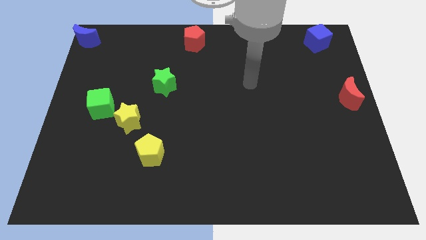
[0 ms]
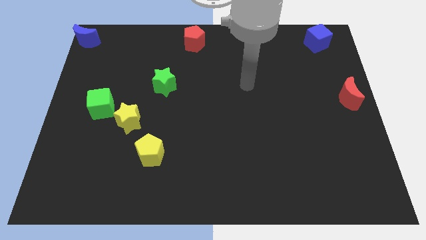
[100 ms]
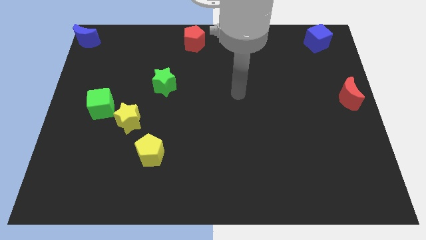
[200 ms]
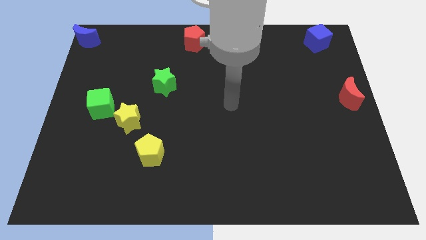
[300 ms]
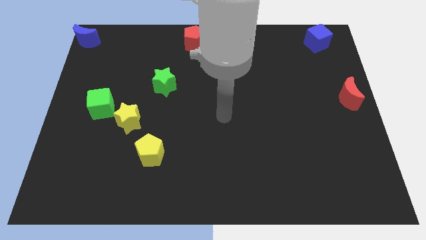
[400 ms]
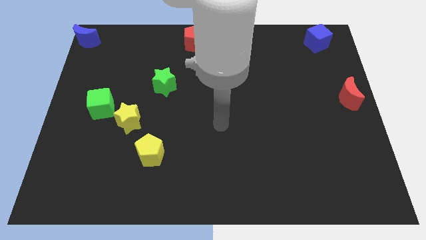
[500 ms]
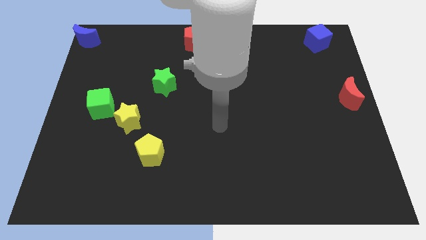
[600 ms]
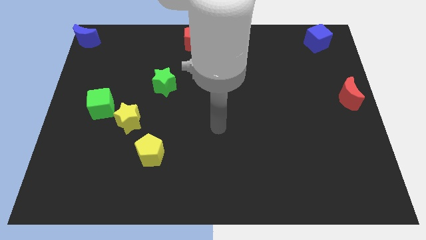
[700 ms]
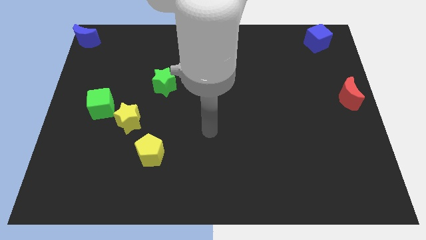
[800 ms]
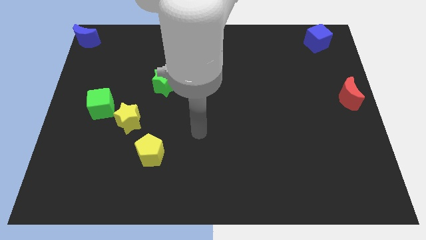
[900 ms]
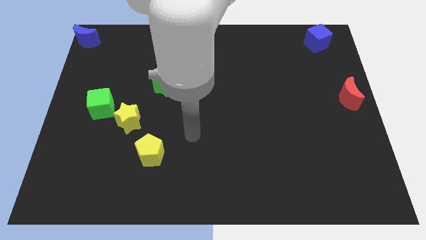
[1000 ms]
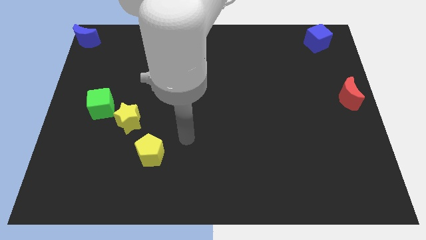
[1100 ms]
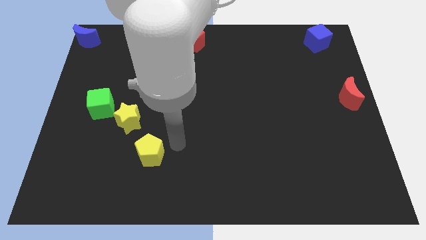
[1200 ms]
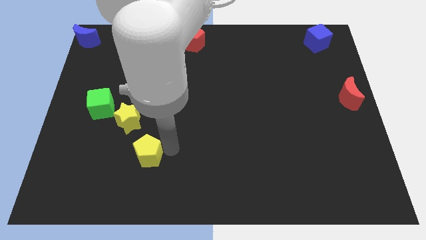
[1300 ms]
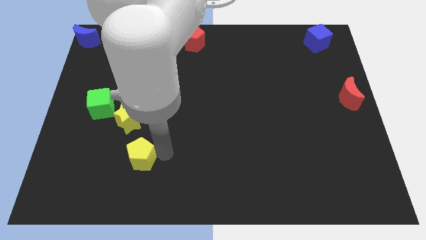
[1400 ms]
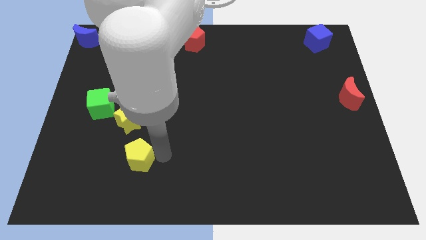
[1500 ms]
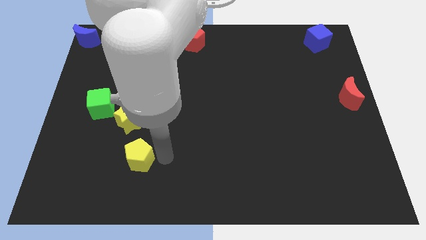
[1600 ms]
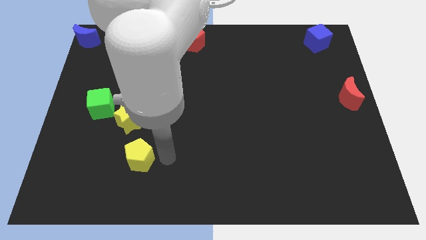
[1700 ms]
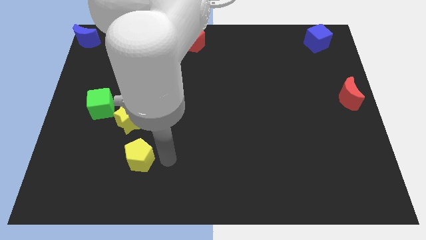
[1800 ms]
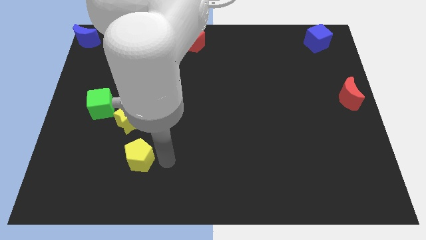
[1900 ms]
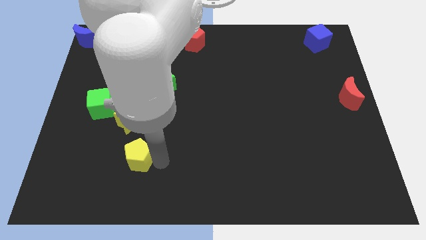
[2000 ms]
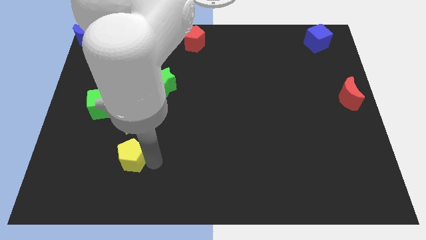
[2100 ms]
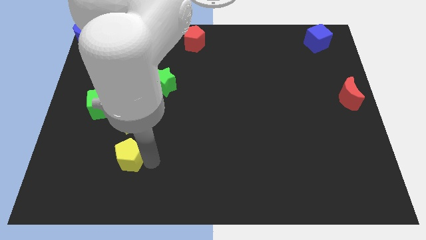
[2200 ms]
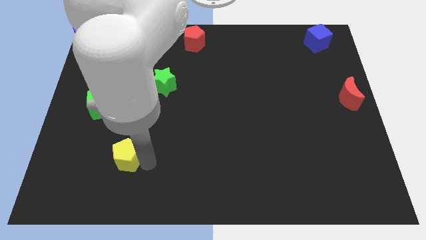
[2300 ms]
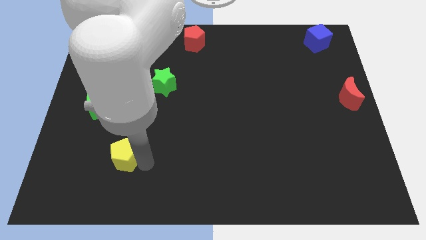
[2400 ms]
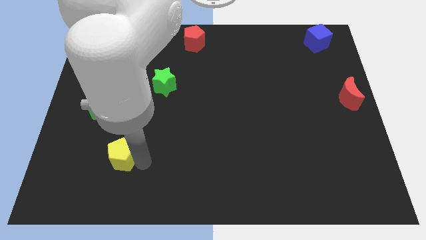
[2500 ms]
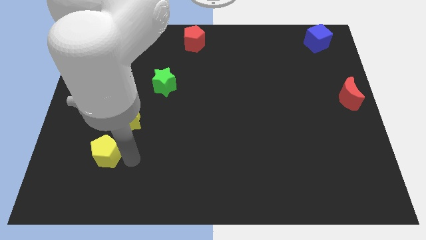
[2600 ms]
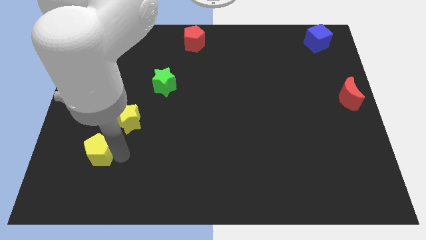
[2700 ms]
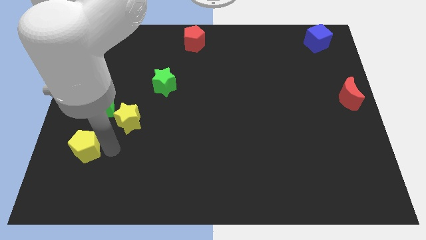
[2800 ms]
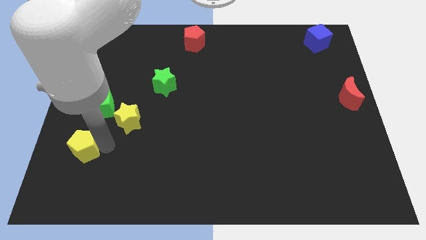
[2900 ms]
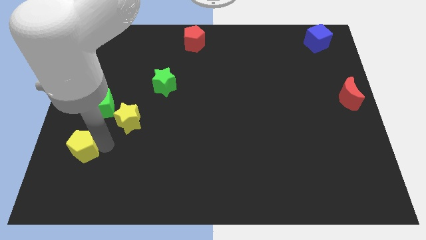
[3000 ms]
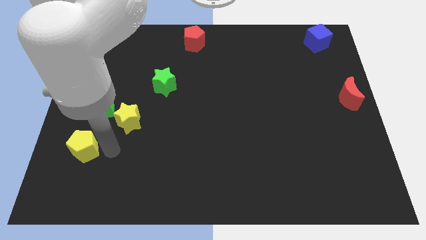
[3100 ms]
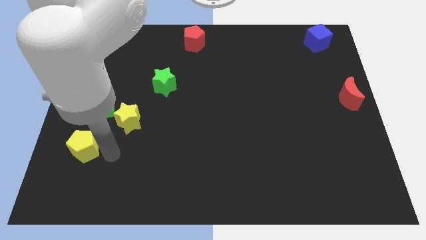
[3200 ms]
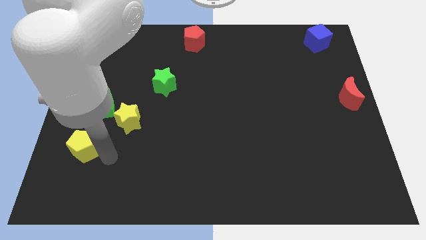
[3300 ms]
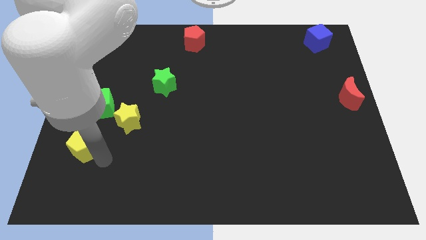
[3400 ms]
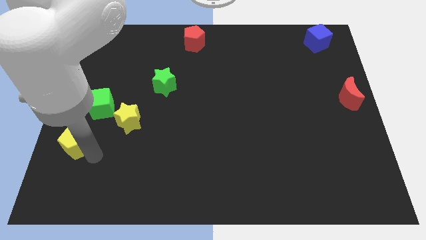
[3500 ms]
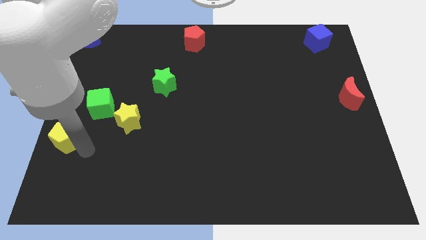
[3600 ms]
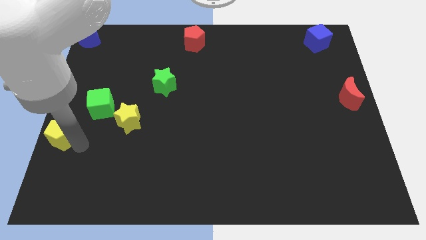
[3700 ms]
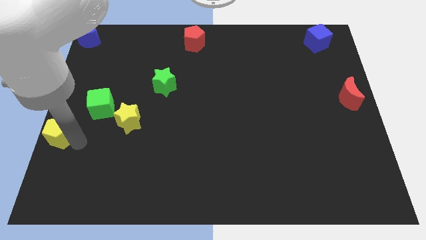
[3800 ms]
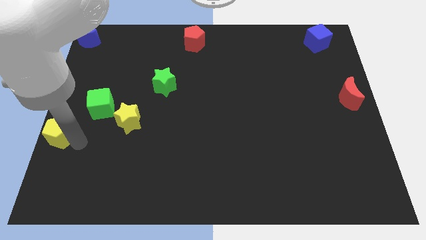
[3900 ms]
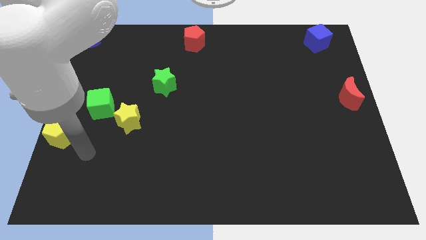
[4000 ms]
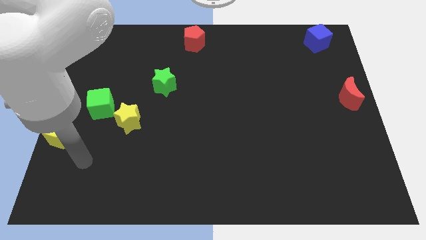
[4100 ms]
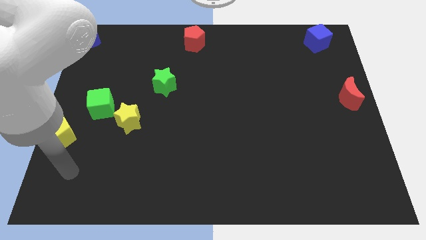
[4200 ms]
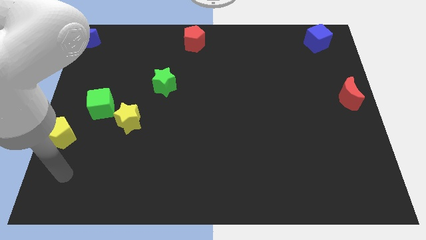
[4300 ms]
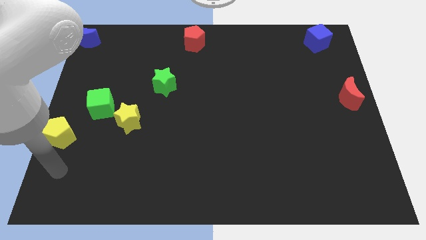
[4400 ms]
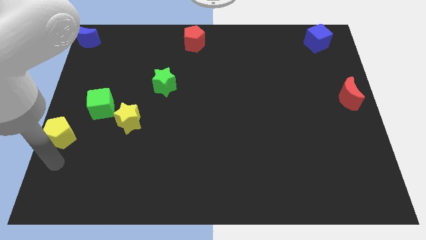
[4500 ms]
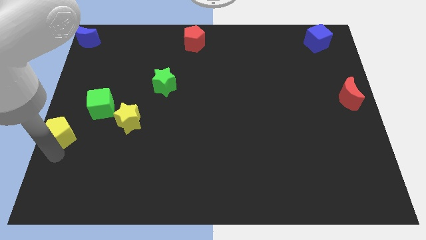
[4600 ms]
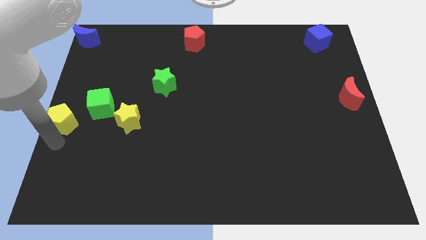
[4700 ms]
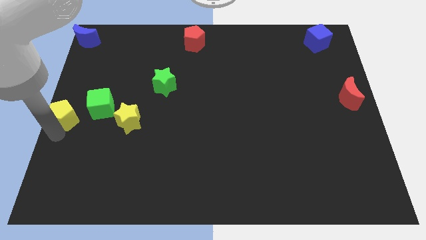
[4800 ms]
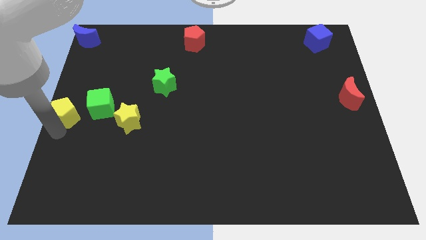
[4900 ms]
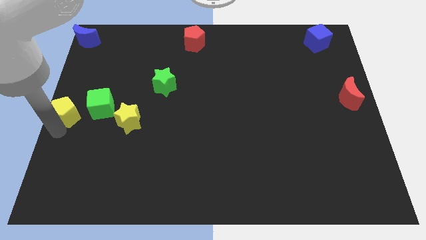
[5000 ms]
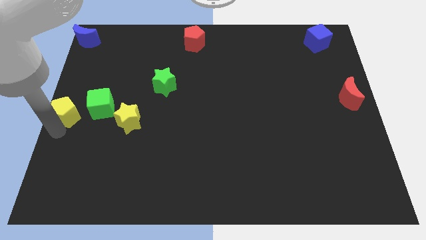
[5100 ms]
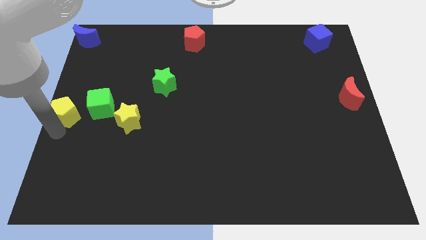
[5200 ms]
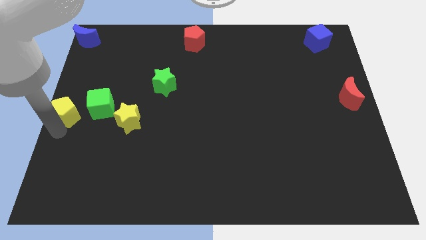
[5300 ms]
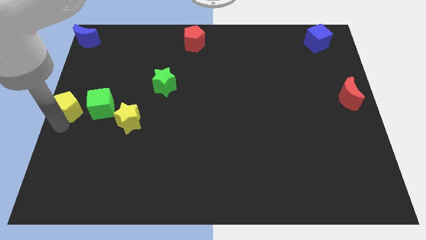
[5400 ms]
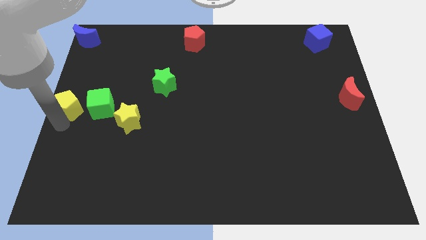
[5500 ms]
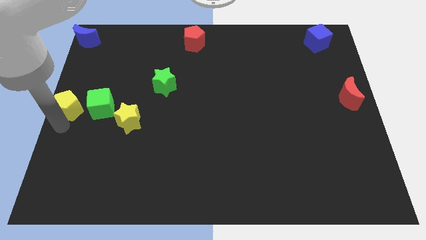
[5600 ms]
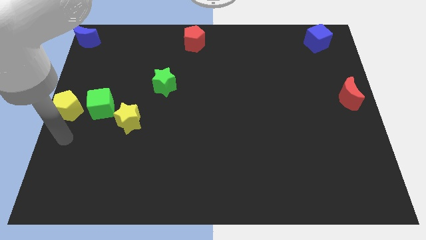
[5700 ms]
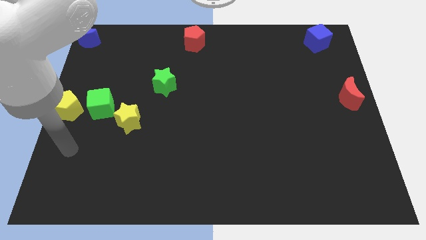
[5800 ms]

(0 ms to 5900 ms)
push the yellow pentagon to the center left side of the board

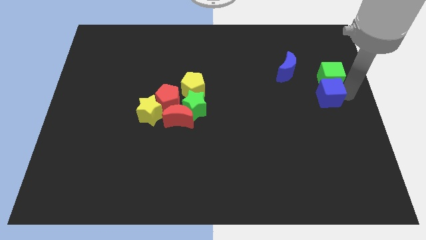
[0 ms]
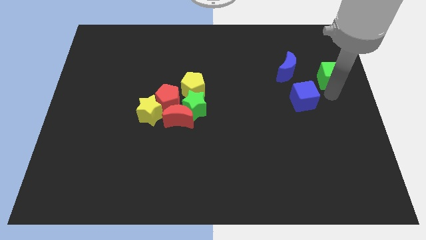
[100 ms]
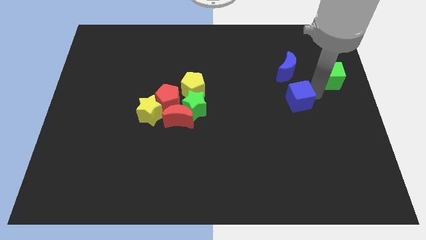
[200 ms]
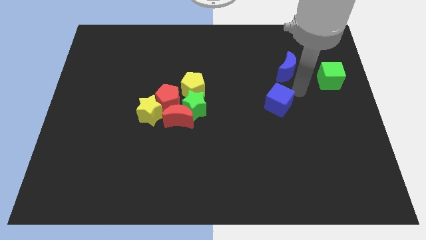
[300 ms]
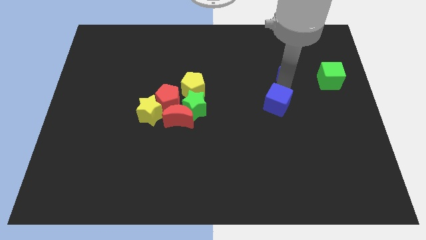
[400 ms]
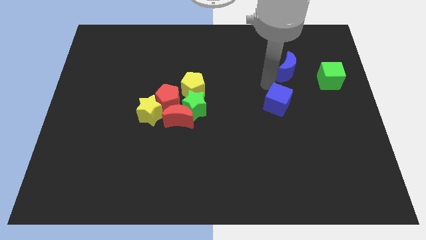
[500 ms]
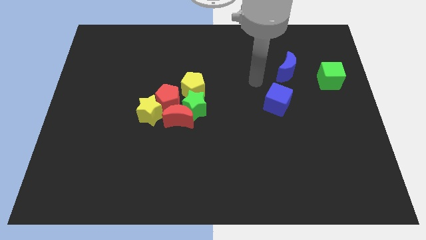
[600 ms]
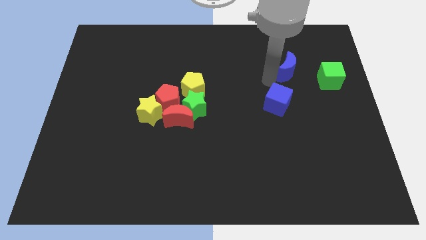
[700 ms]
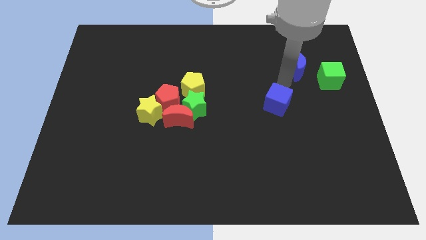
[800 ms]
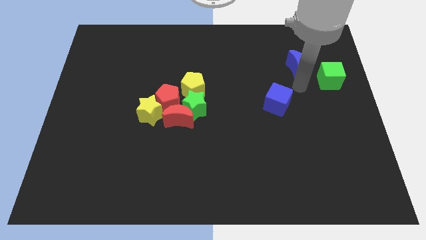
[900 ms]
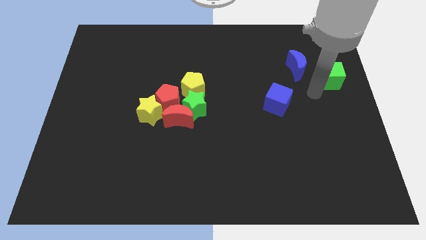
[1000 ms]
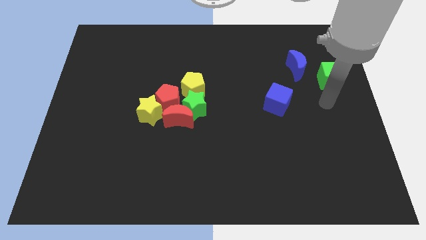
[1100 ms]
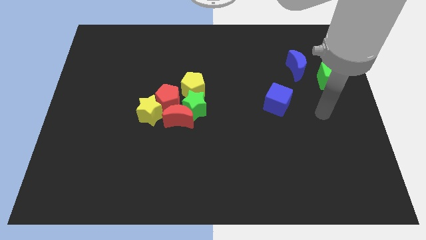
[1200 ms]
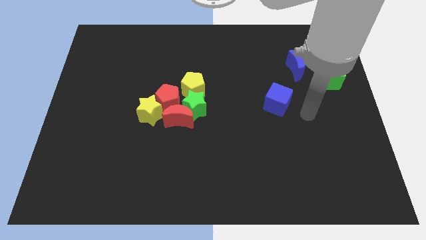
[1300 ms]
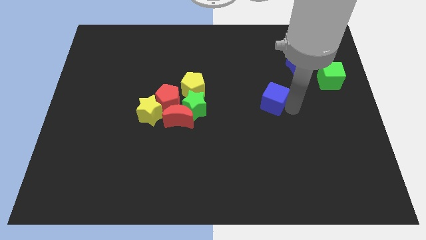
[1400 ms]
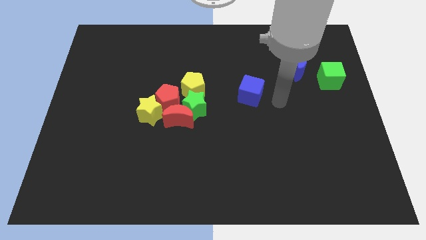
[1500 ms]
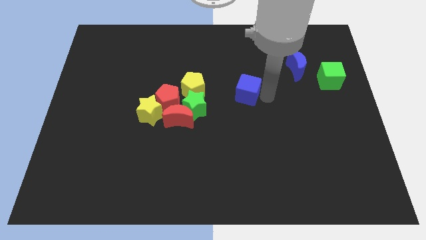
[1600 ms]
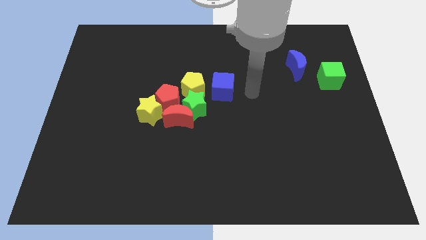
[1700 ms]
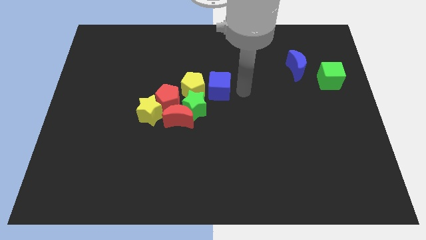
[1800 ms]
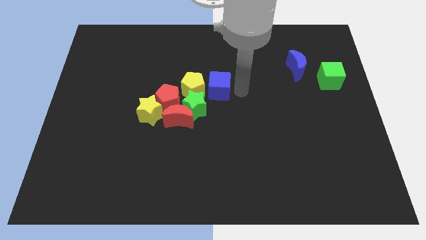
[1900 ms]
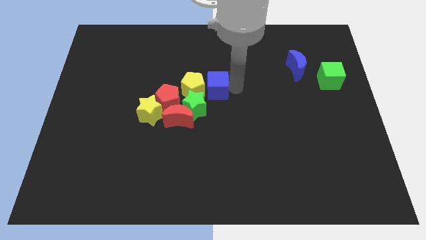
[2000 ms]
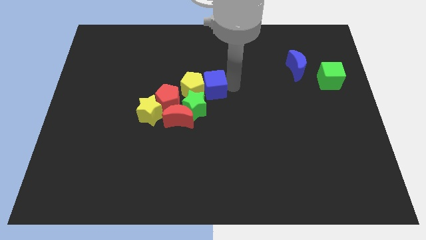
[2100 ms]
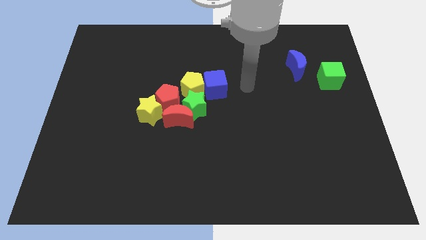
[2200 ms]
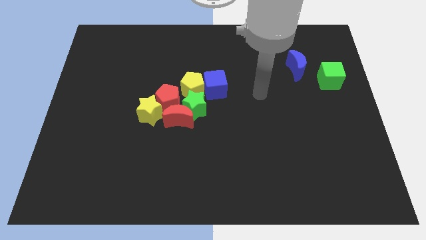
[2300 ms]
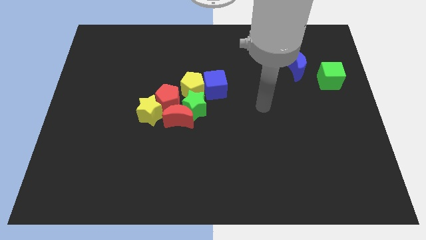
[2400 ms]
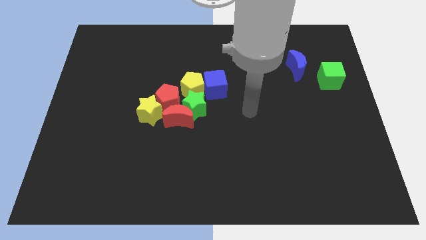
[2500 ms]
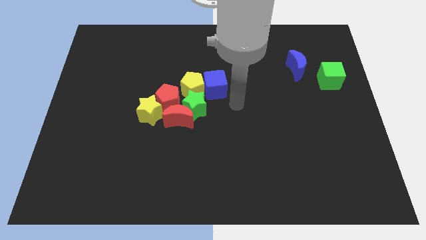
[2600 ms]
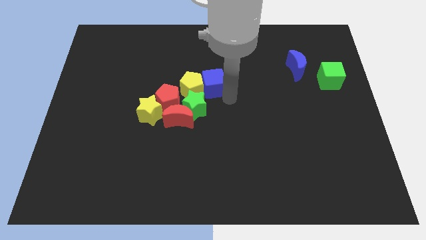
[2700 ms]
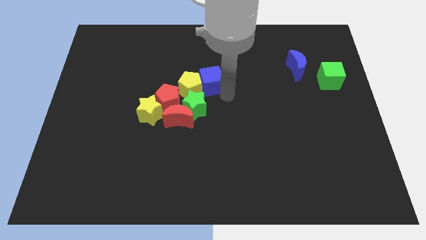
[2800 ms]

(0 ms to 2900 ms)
drag the blue cube to the left
